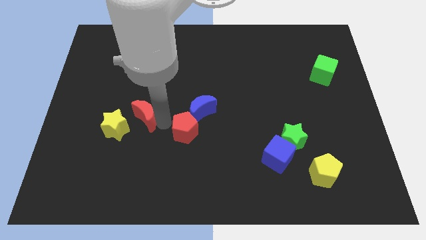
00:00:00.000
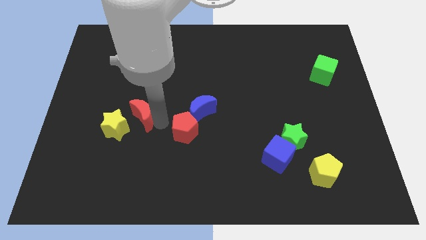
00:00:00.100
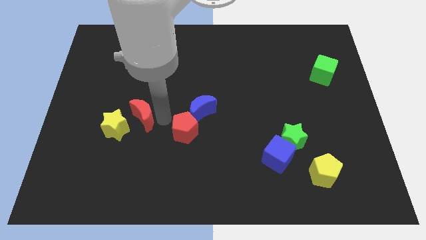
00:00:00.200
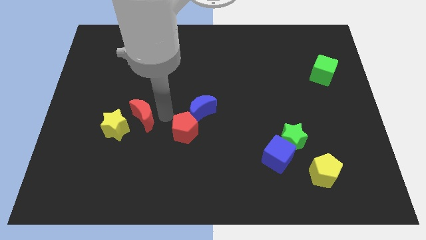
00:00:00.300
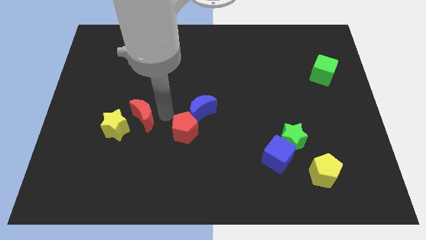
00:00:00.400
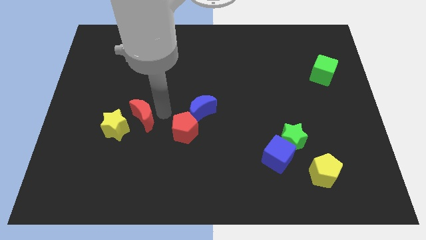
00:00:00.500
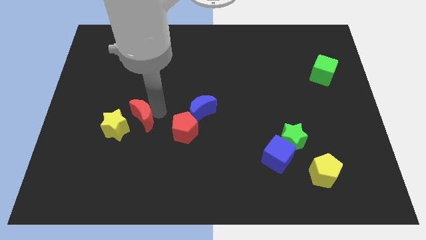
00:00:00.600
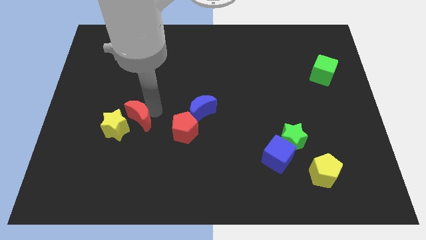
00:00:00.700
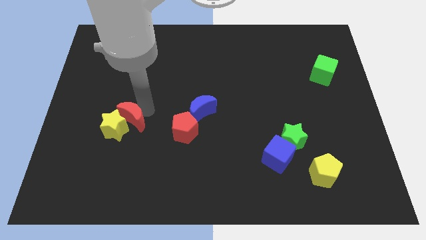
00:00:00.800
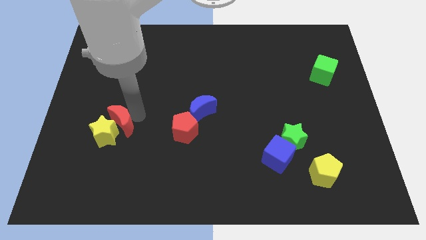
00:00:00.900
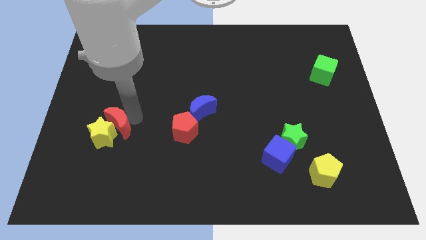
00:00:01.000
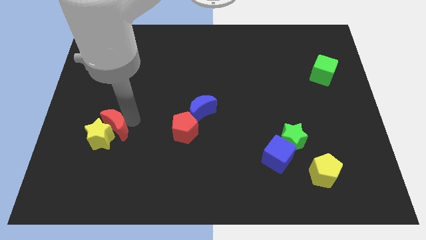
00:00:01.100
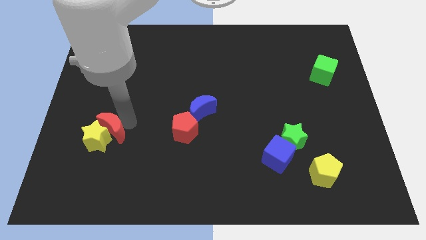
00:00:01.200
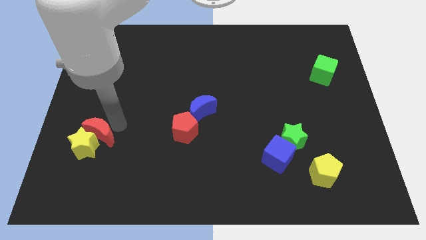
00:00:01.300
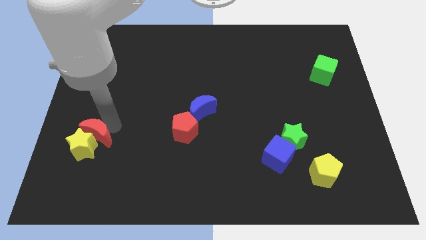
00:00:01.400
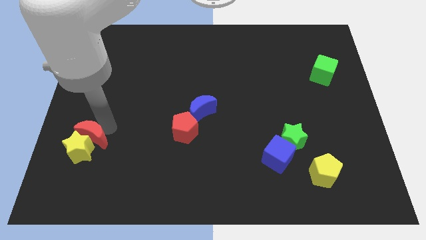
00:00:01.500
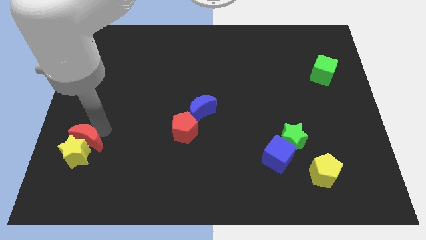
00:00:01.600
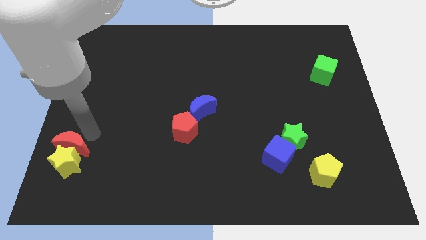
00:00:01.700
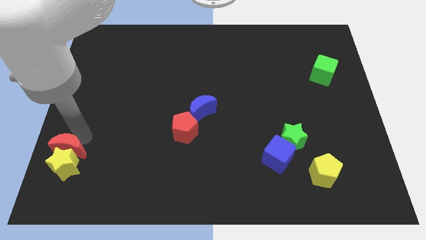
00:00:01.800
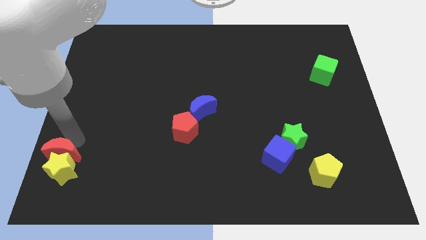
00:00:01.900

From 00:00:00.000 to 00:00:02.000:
push the red crescent into the yellow star

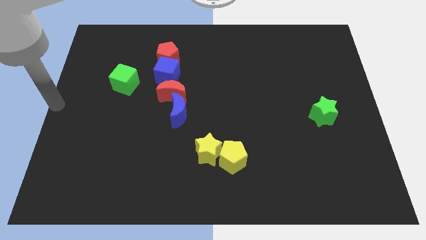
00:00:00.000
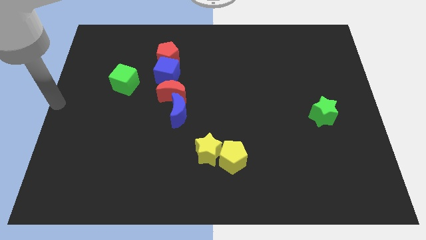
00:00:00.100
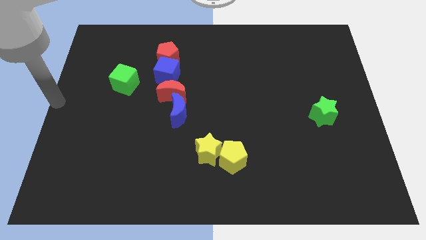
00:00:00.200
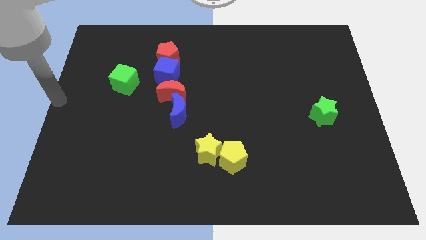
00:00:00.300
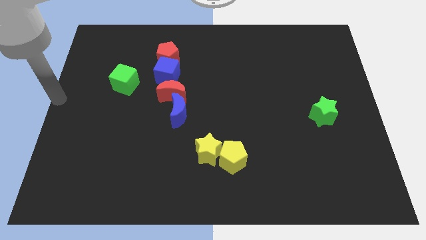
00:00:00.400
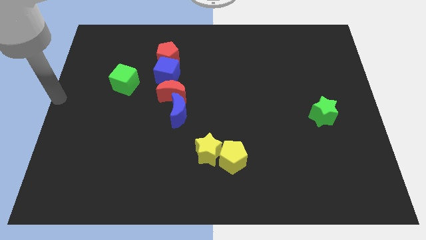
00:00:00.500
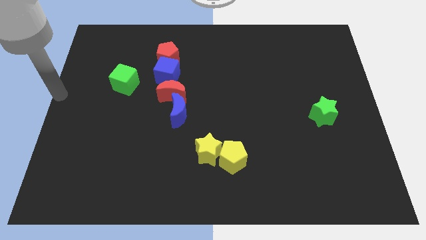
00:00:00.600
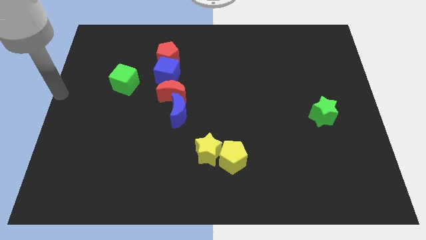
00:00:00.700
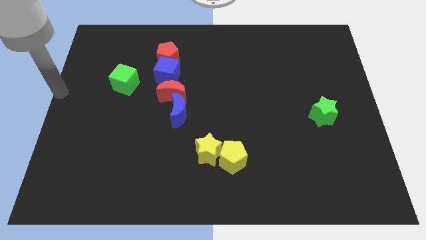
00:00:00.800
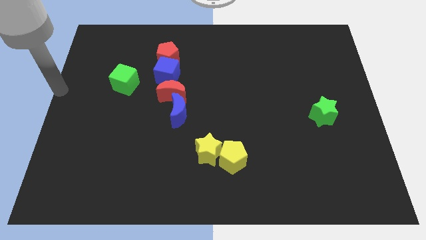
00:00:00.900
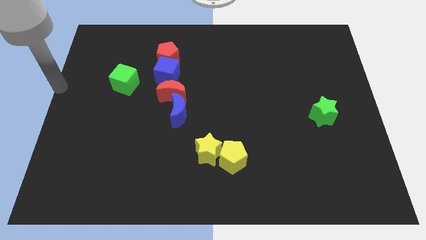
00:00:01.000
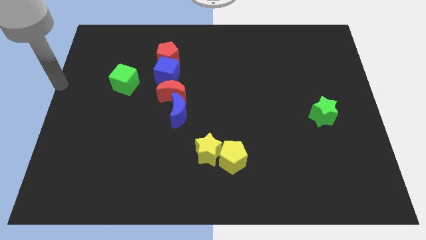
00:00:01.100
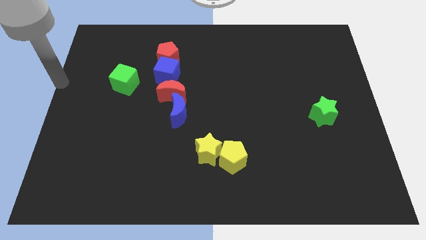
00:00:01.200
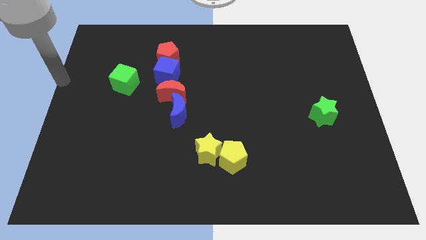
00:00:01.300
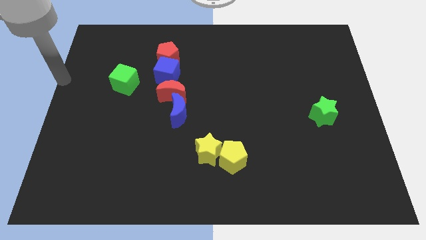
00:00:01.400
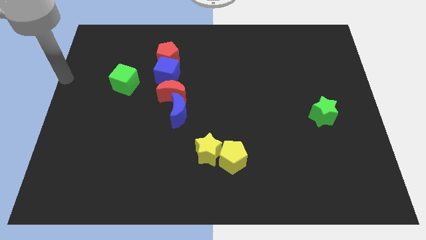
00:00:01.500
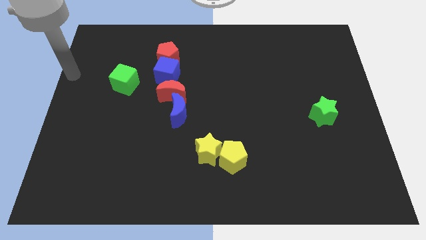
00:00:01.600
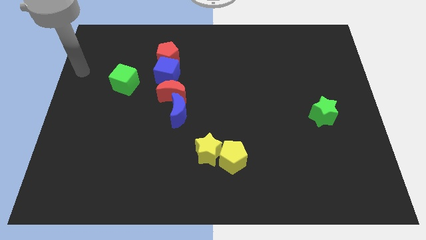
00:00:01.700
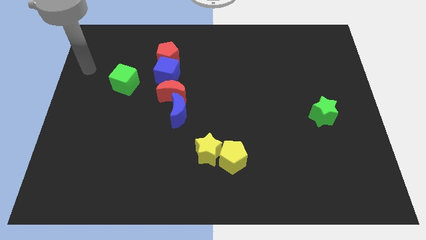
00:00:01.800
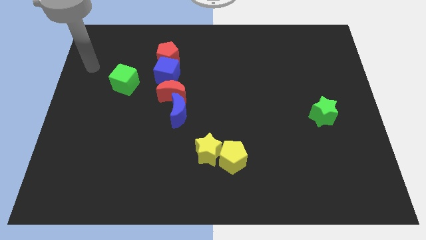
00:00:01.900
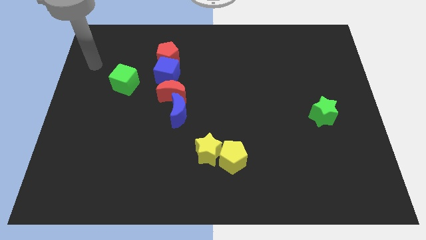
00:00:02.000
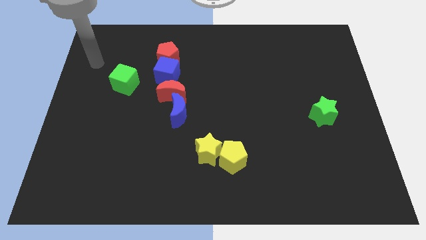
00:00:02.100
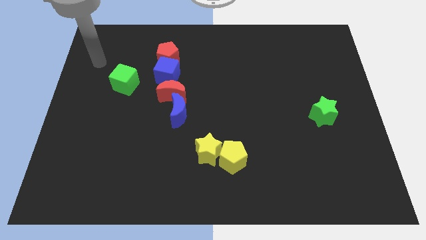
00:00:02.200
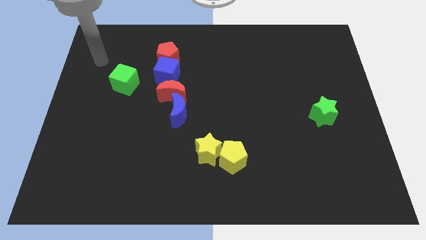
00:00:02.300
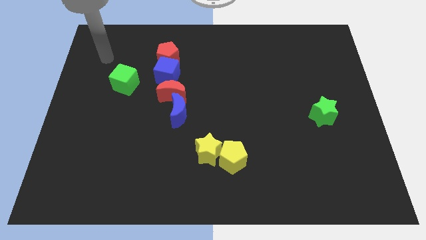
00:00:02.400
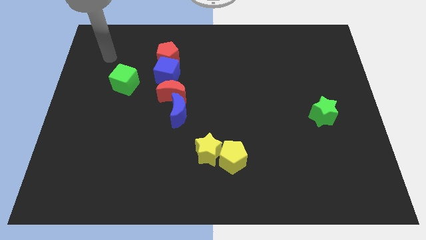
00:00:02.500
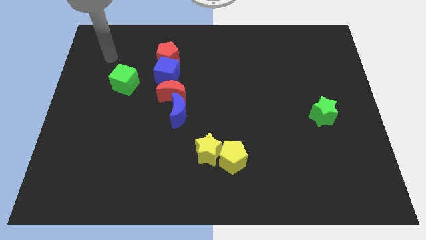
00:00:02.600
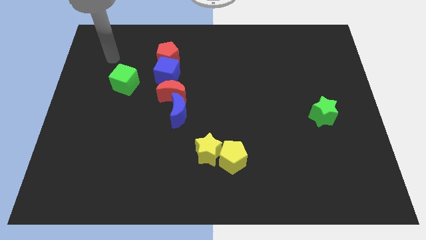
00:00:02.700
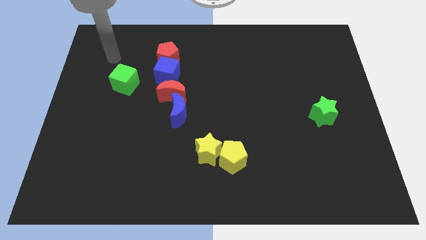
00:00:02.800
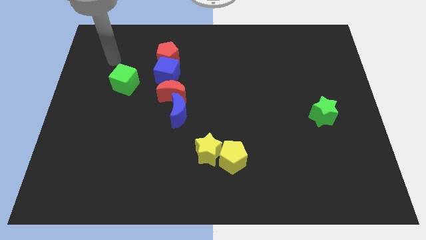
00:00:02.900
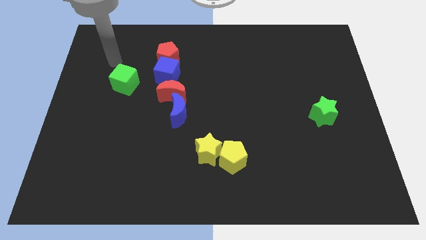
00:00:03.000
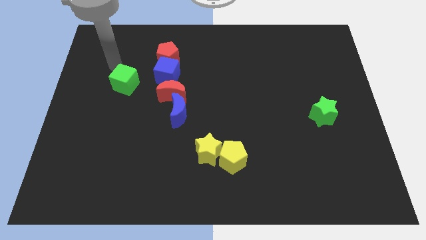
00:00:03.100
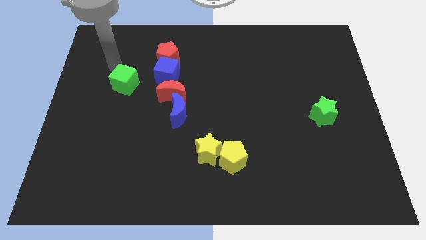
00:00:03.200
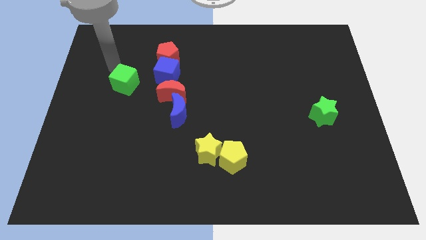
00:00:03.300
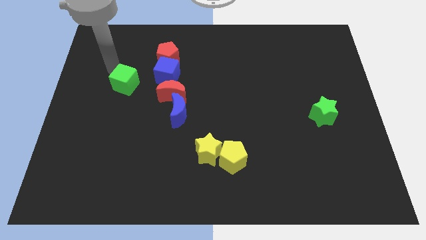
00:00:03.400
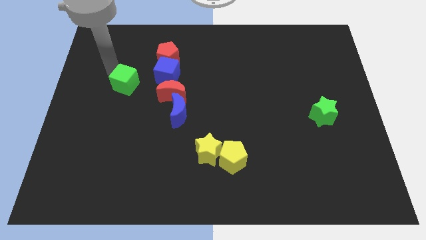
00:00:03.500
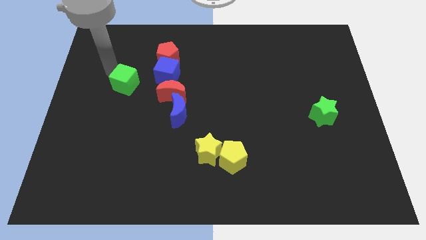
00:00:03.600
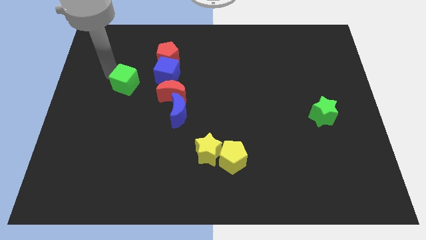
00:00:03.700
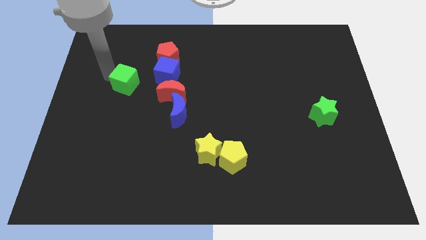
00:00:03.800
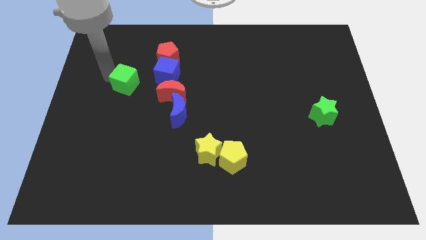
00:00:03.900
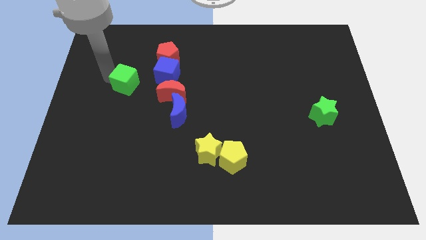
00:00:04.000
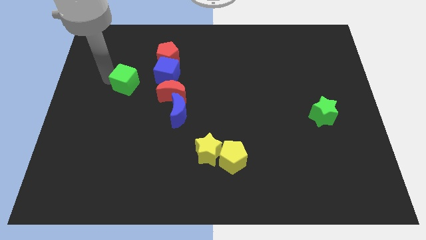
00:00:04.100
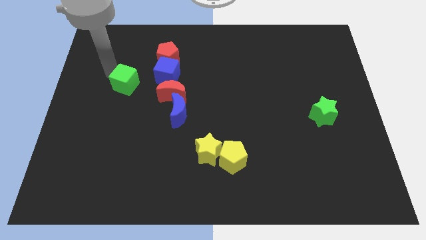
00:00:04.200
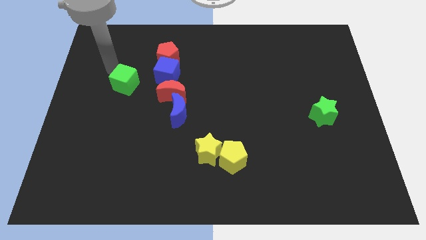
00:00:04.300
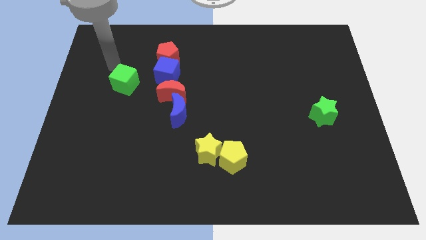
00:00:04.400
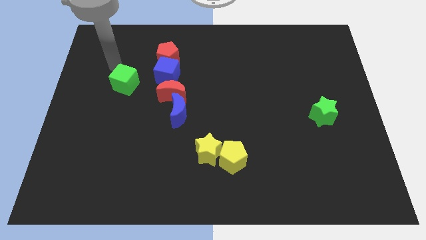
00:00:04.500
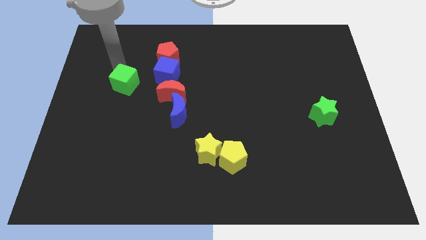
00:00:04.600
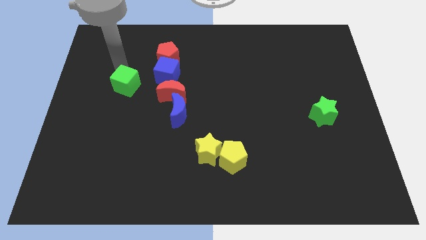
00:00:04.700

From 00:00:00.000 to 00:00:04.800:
tap the top side of the green cube

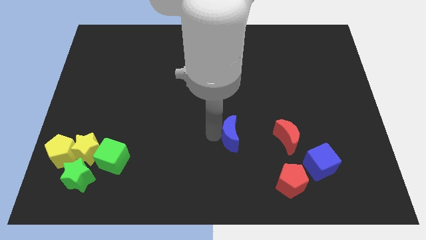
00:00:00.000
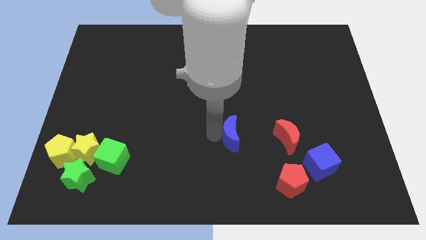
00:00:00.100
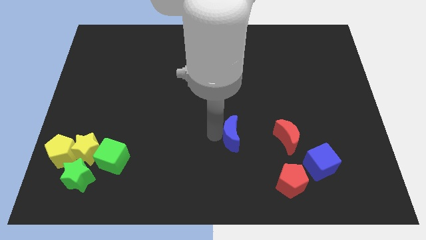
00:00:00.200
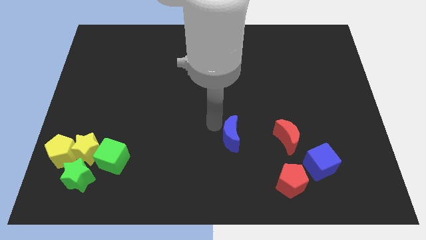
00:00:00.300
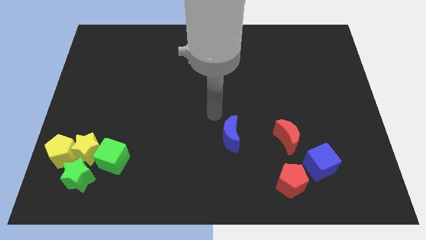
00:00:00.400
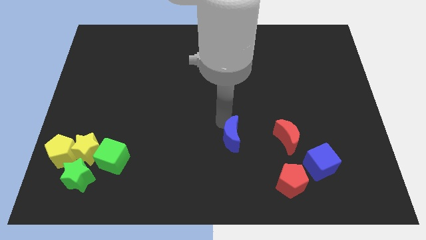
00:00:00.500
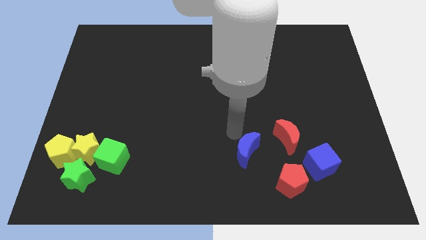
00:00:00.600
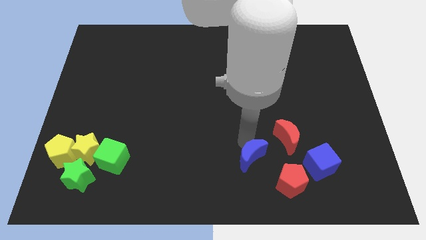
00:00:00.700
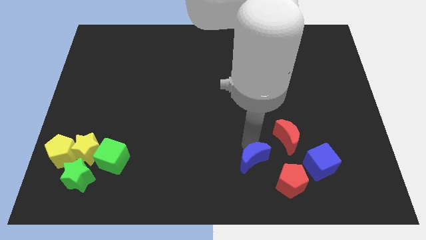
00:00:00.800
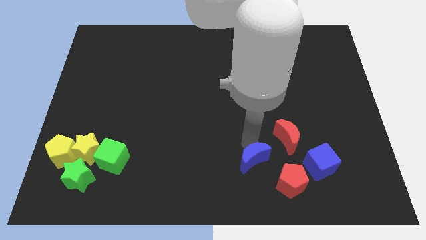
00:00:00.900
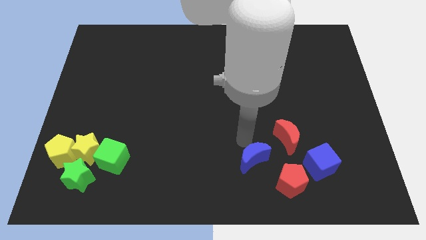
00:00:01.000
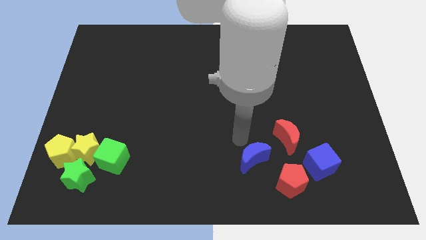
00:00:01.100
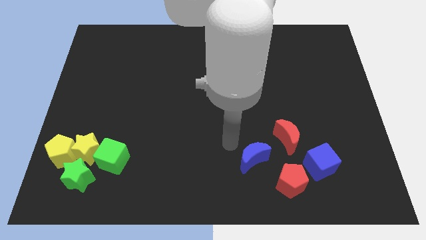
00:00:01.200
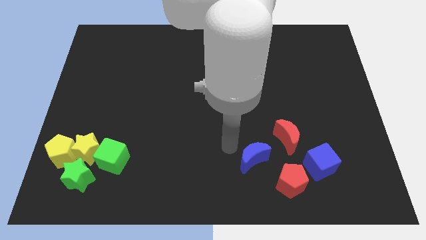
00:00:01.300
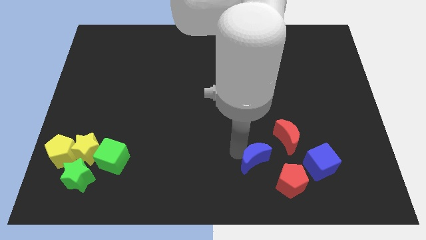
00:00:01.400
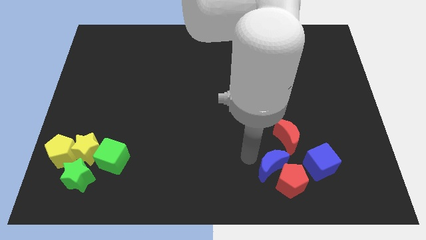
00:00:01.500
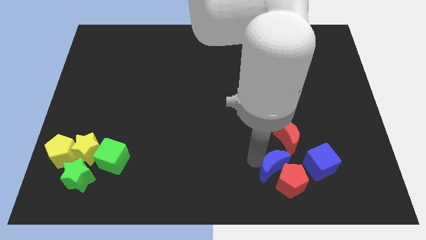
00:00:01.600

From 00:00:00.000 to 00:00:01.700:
place the blue crescent on the top left of the red pentagon

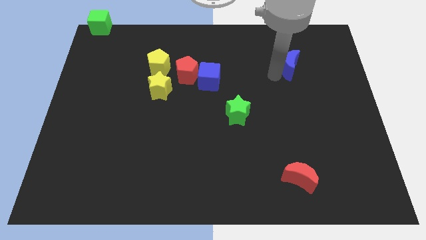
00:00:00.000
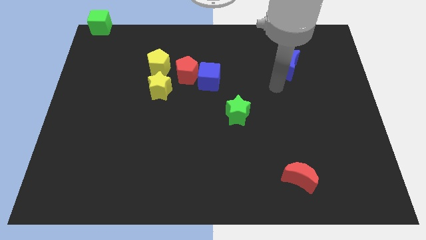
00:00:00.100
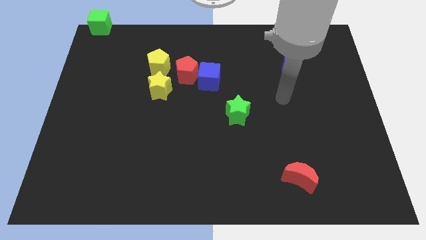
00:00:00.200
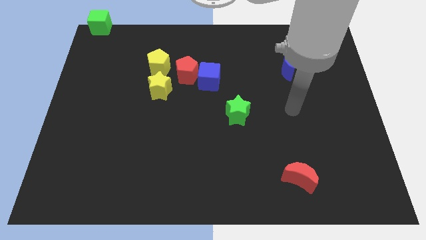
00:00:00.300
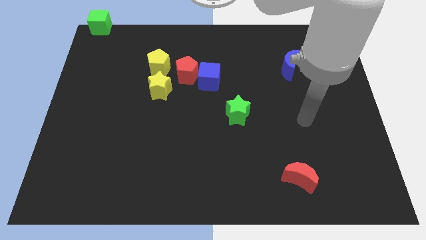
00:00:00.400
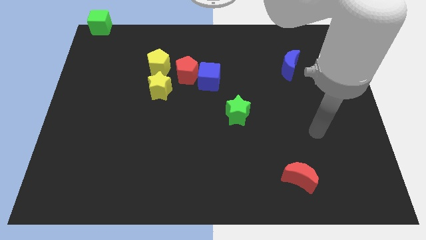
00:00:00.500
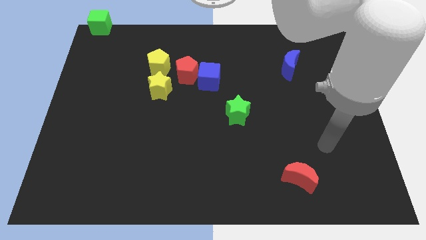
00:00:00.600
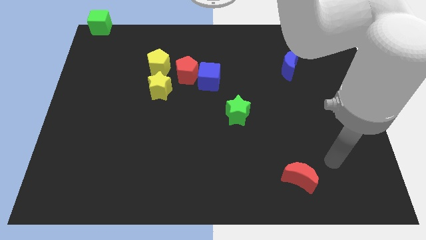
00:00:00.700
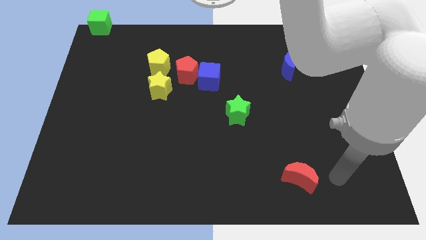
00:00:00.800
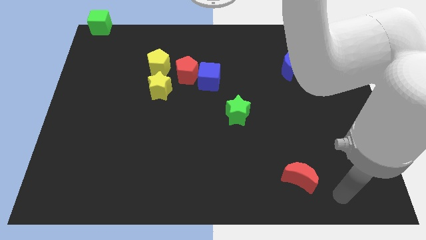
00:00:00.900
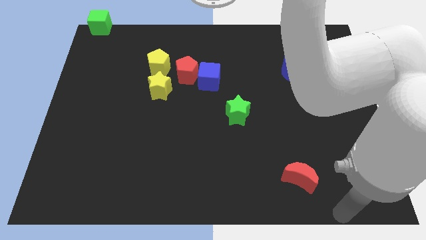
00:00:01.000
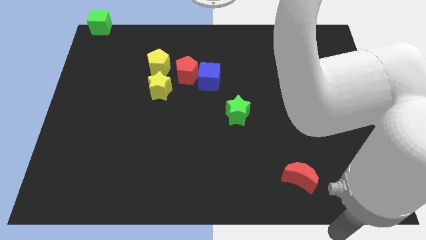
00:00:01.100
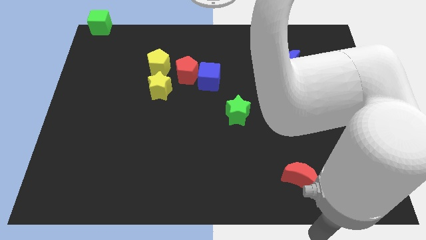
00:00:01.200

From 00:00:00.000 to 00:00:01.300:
move your arm towards the bottom side
